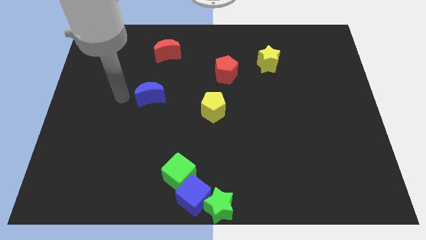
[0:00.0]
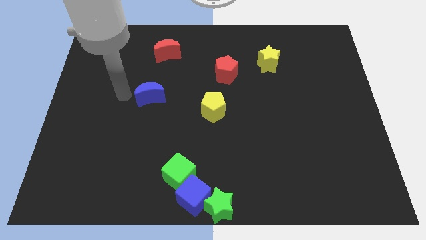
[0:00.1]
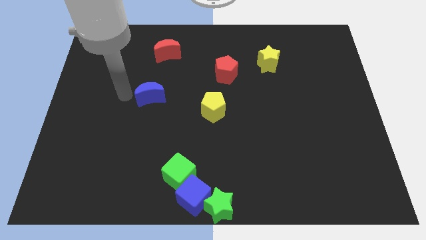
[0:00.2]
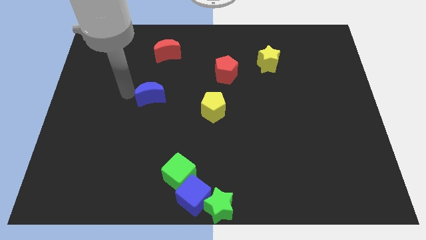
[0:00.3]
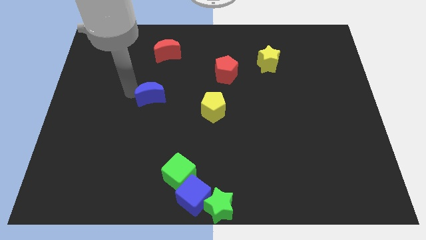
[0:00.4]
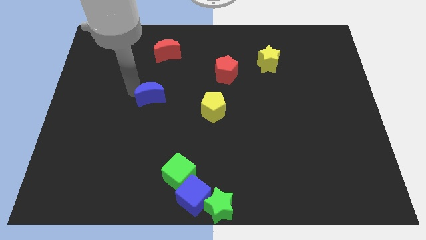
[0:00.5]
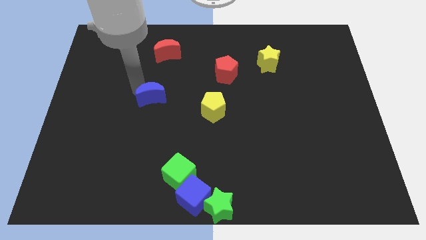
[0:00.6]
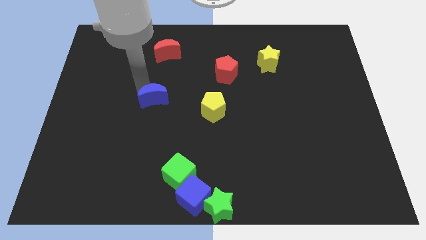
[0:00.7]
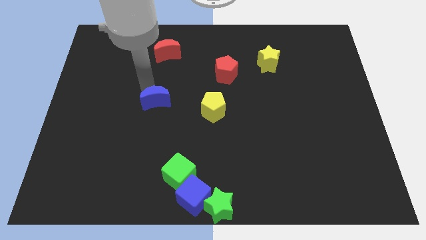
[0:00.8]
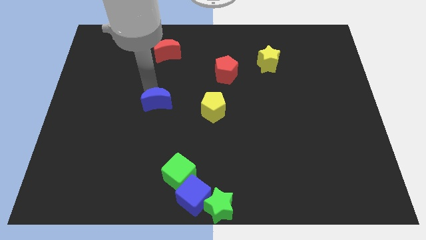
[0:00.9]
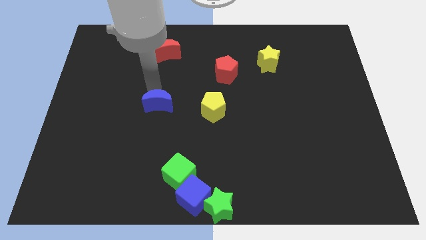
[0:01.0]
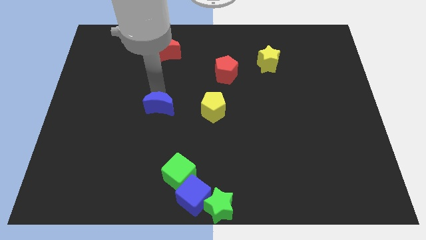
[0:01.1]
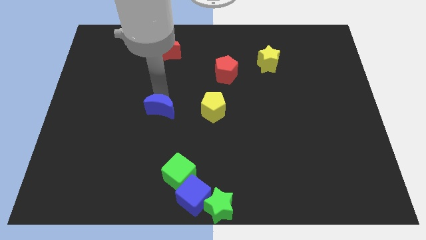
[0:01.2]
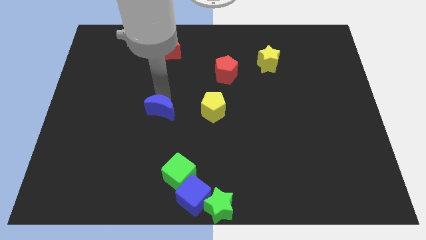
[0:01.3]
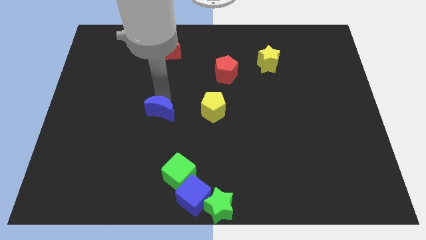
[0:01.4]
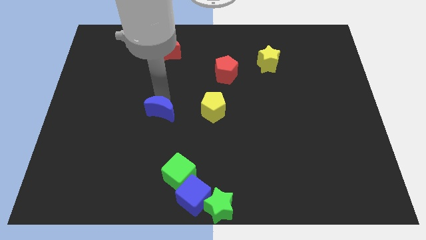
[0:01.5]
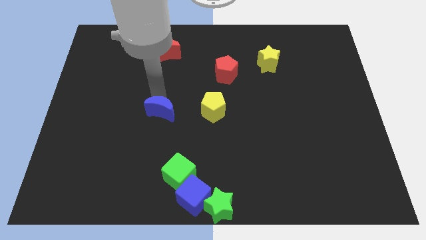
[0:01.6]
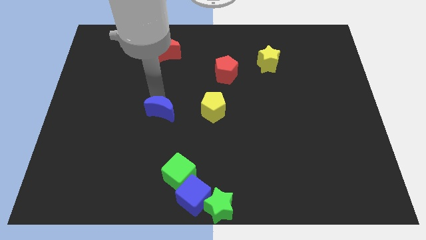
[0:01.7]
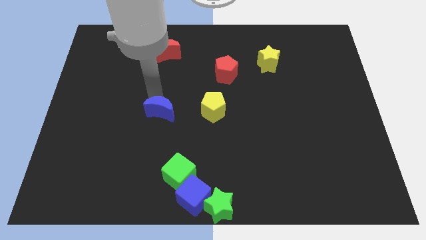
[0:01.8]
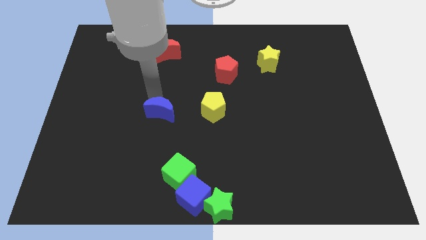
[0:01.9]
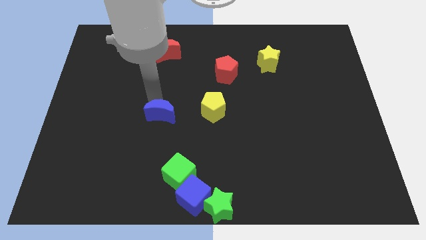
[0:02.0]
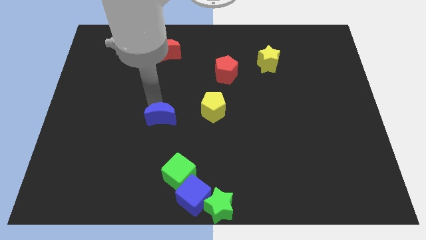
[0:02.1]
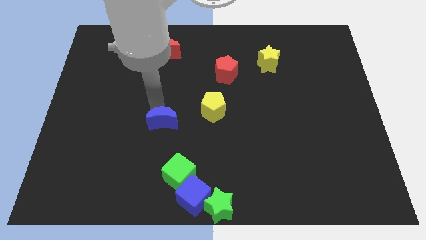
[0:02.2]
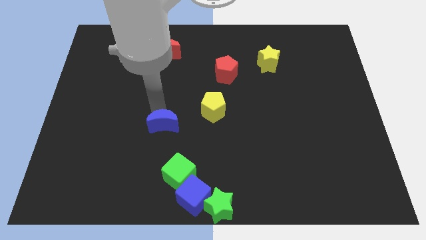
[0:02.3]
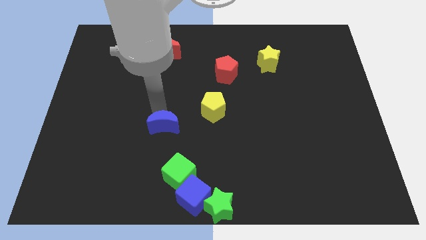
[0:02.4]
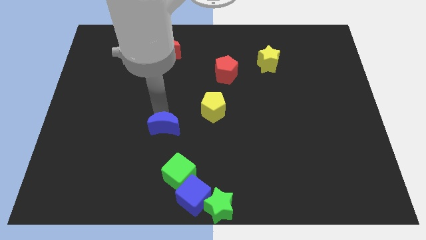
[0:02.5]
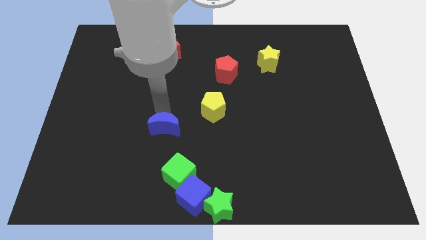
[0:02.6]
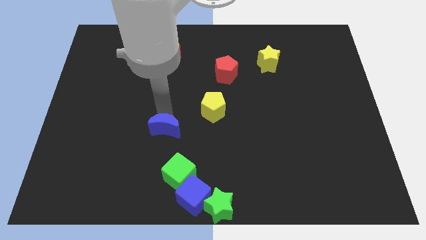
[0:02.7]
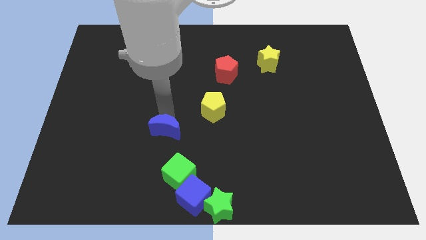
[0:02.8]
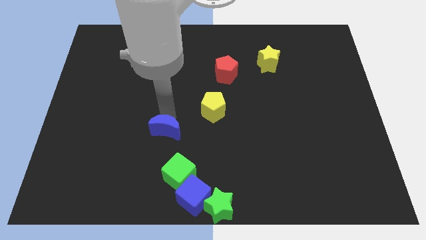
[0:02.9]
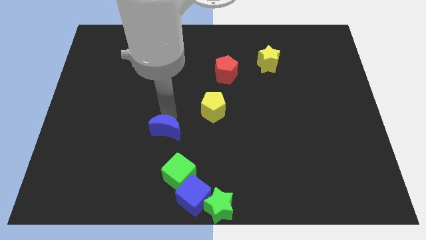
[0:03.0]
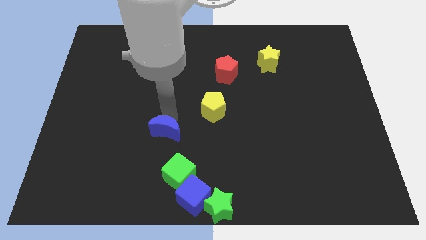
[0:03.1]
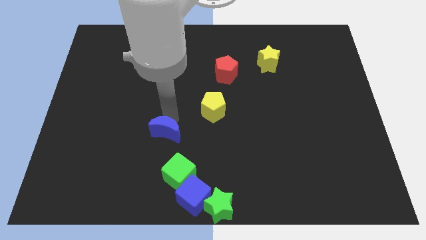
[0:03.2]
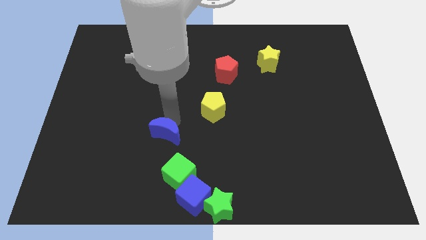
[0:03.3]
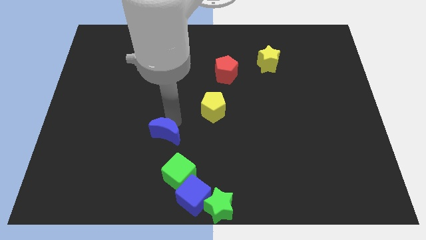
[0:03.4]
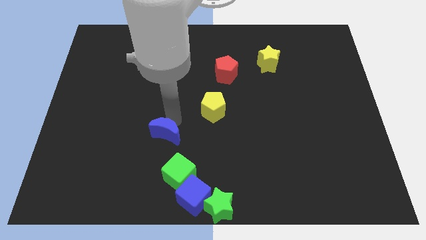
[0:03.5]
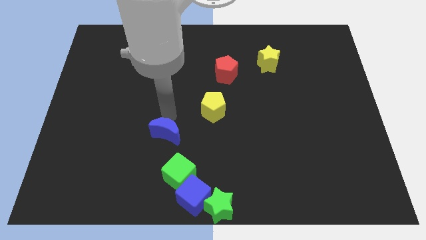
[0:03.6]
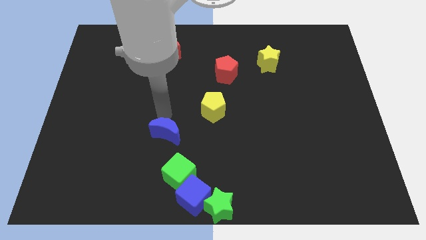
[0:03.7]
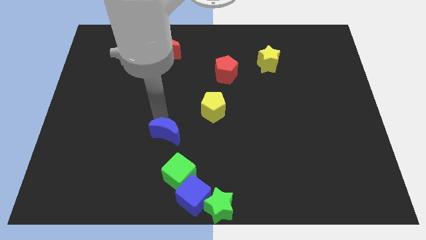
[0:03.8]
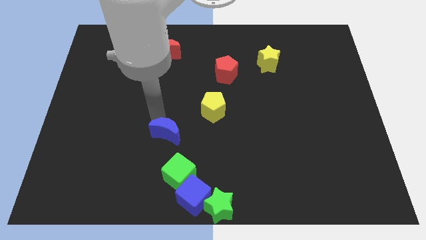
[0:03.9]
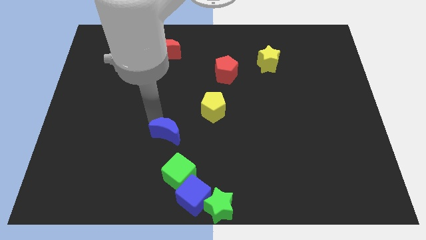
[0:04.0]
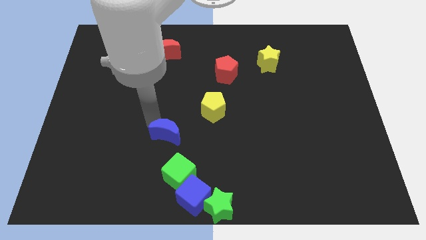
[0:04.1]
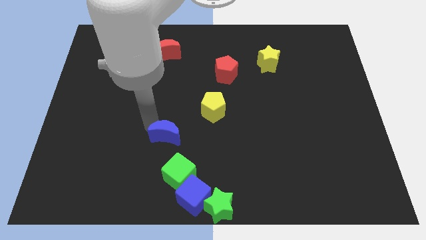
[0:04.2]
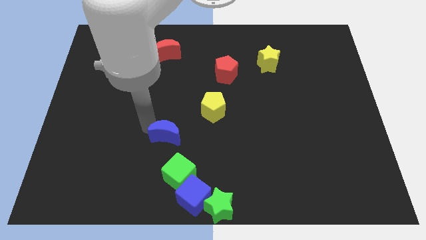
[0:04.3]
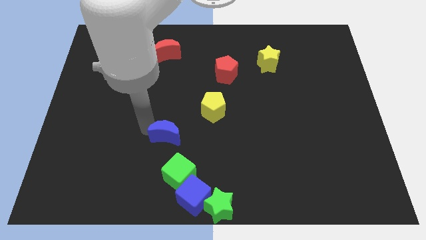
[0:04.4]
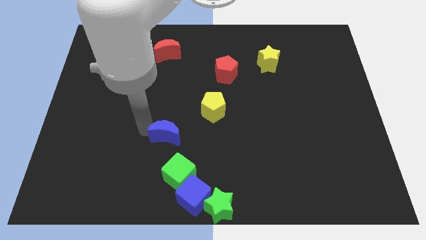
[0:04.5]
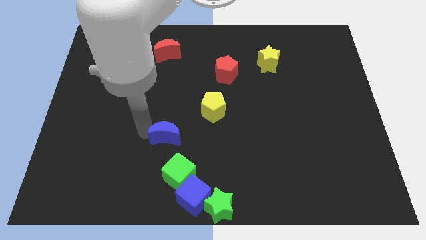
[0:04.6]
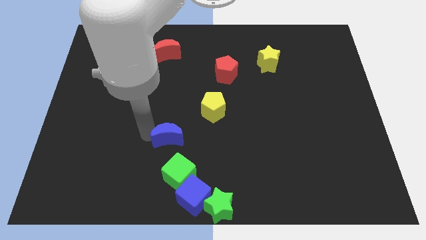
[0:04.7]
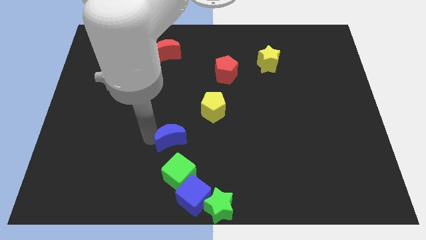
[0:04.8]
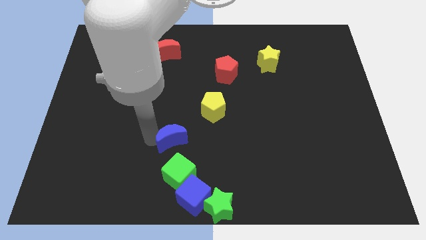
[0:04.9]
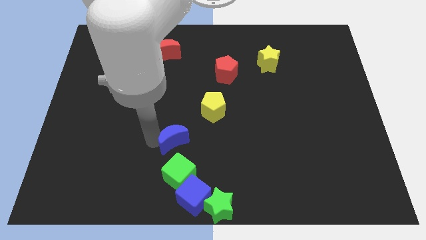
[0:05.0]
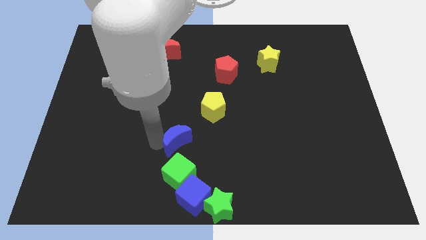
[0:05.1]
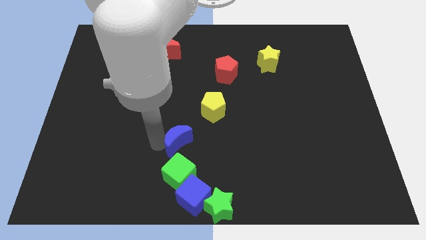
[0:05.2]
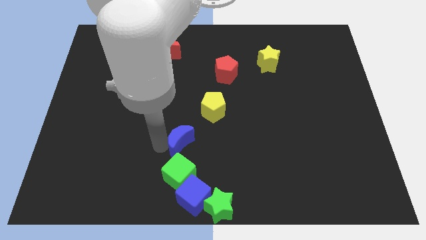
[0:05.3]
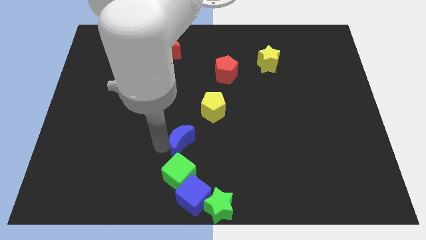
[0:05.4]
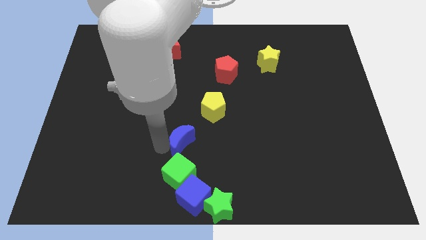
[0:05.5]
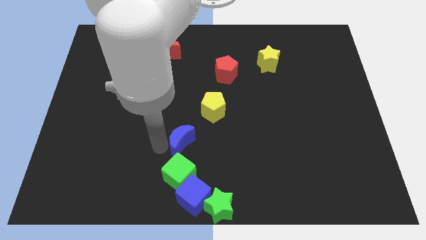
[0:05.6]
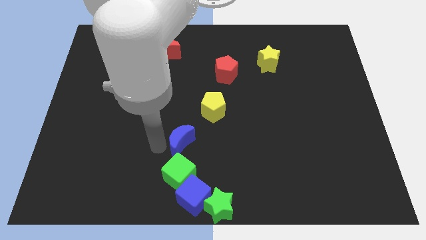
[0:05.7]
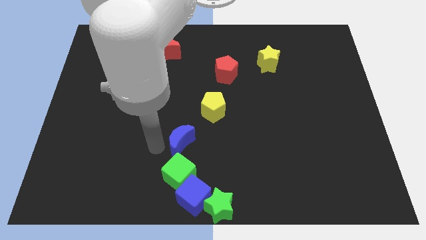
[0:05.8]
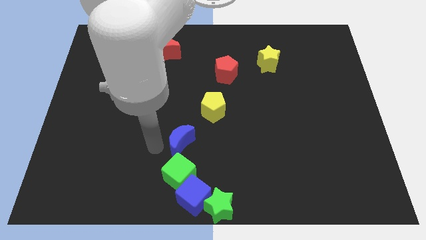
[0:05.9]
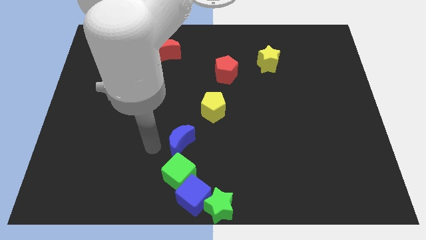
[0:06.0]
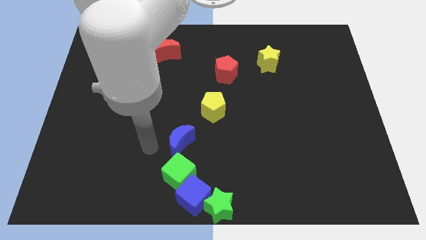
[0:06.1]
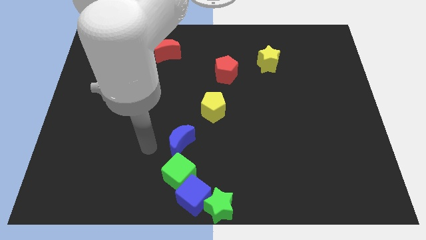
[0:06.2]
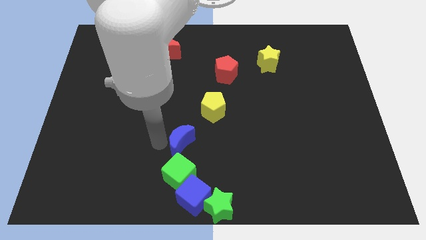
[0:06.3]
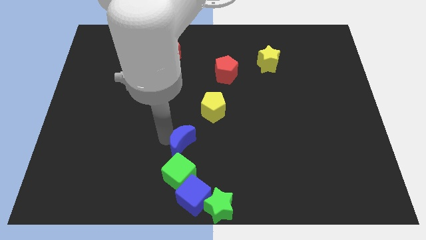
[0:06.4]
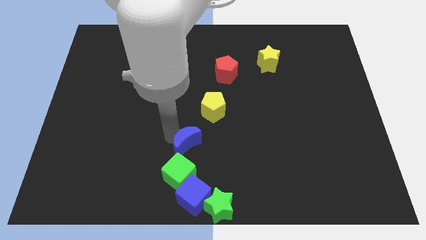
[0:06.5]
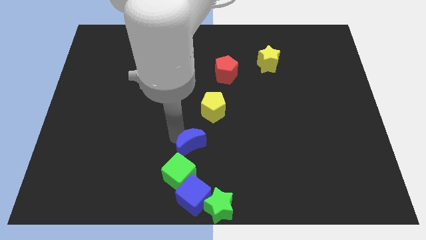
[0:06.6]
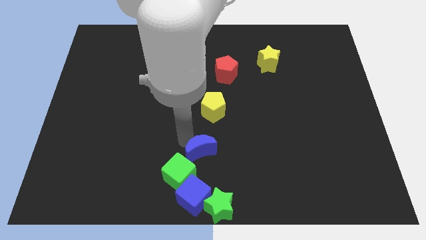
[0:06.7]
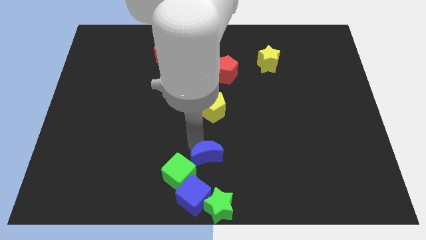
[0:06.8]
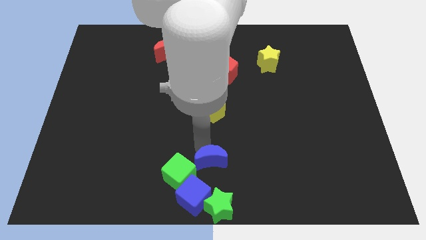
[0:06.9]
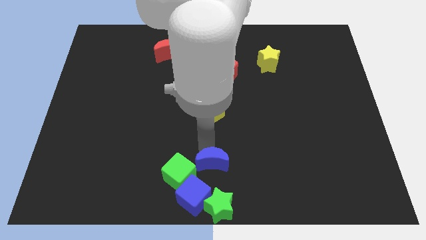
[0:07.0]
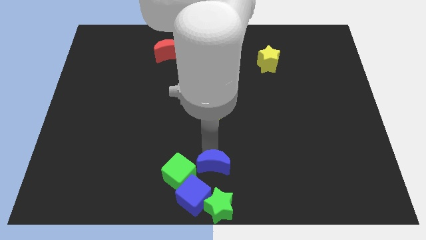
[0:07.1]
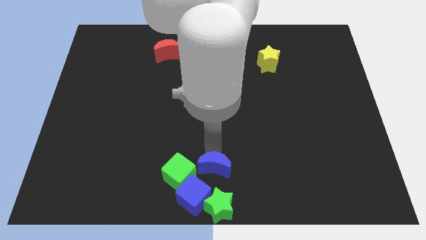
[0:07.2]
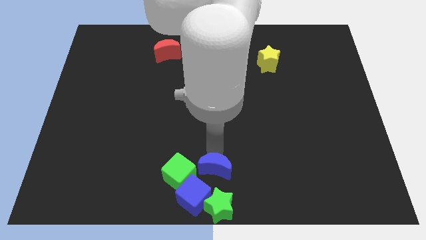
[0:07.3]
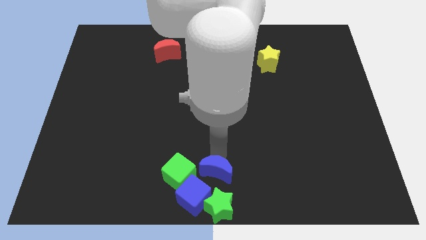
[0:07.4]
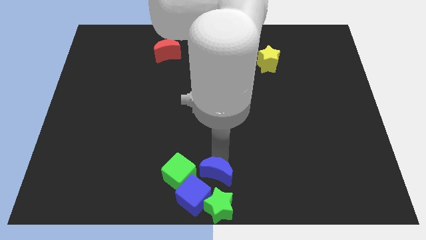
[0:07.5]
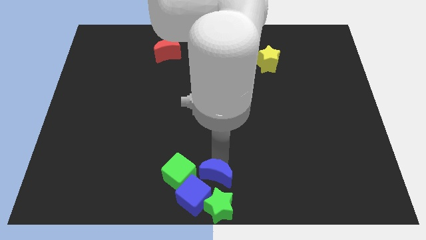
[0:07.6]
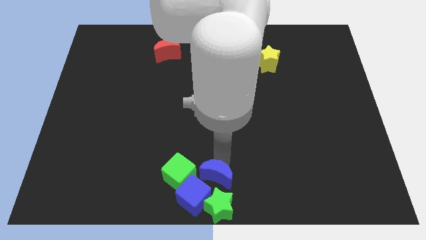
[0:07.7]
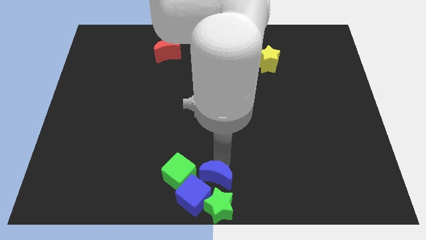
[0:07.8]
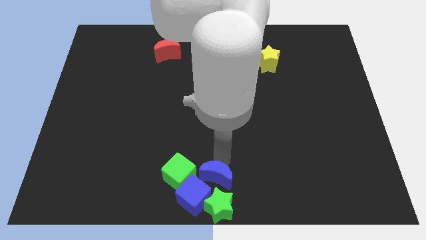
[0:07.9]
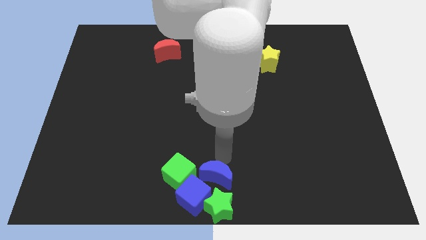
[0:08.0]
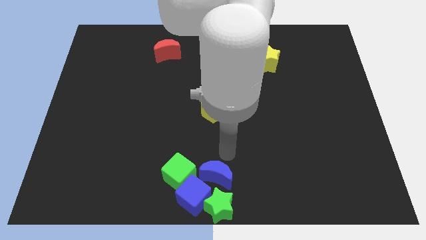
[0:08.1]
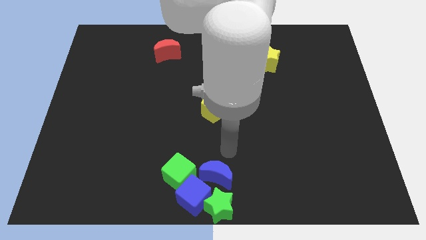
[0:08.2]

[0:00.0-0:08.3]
place the blue moon above the green star

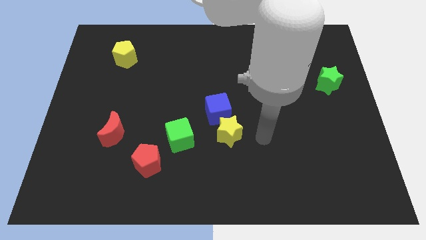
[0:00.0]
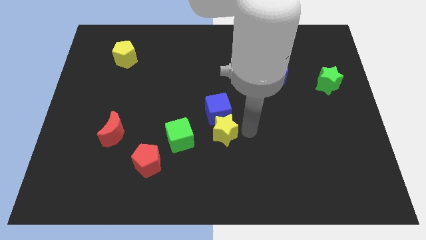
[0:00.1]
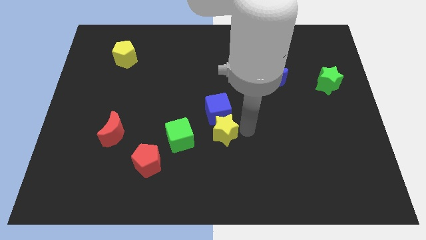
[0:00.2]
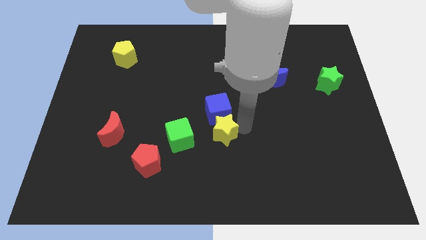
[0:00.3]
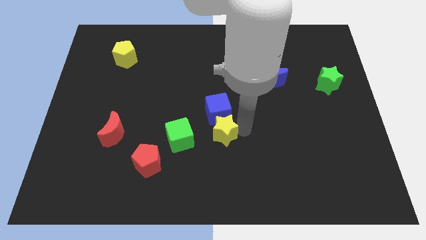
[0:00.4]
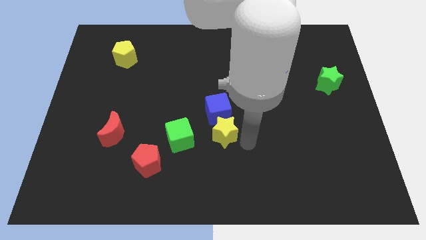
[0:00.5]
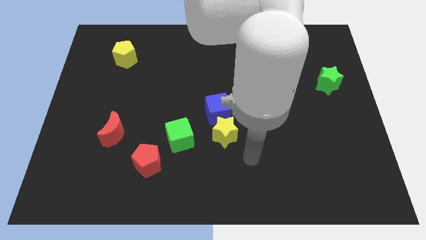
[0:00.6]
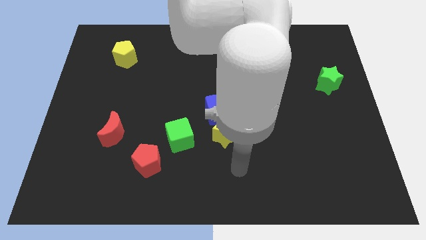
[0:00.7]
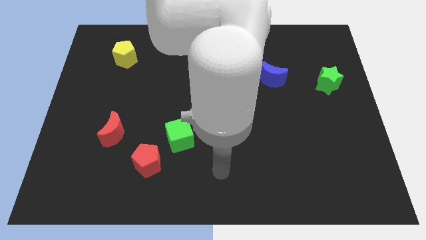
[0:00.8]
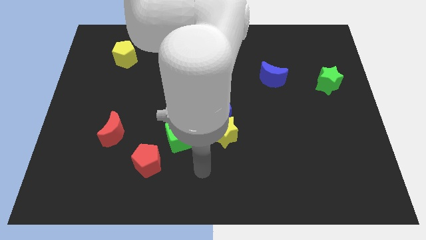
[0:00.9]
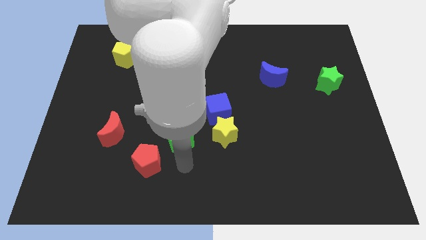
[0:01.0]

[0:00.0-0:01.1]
move your arm below the green cube
